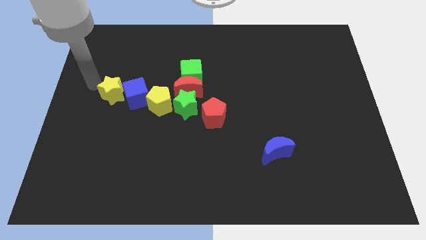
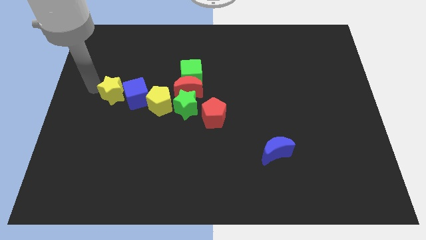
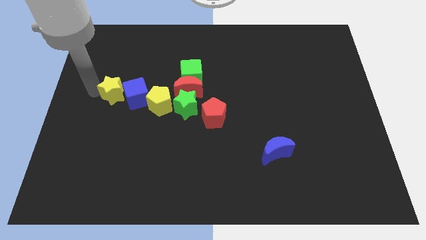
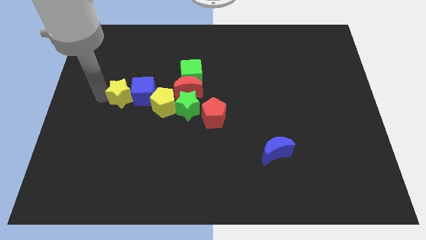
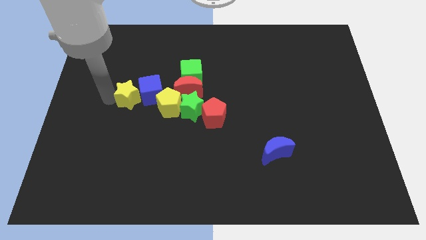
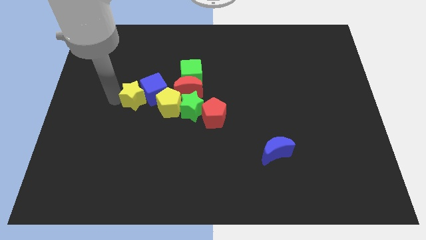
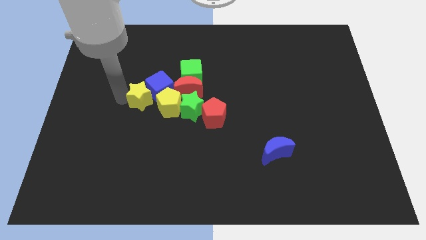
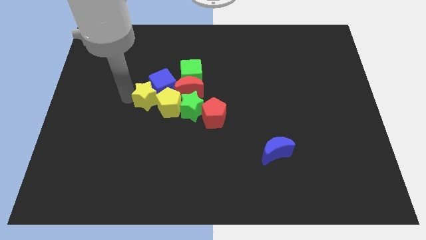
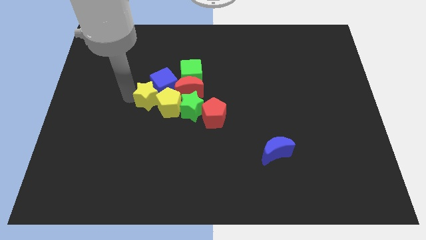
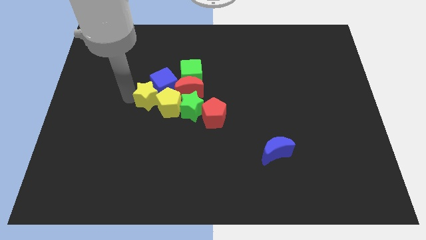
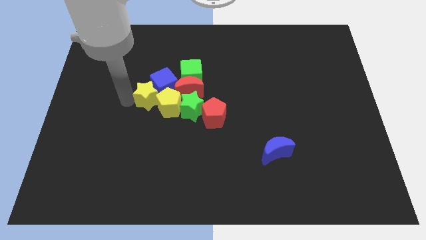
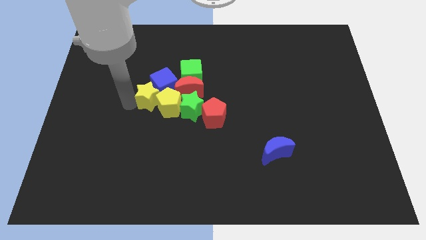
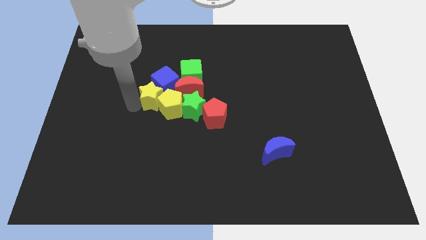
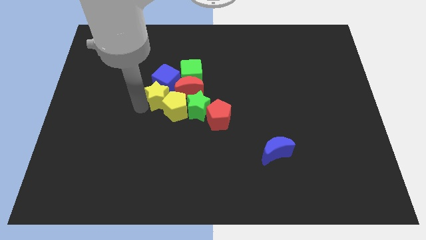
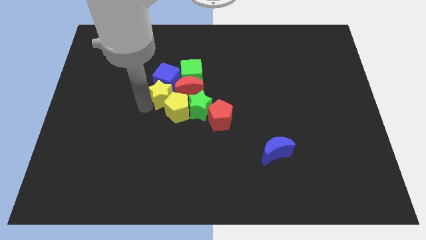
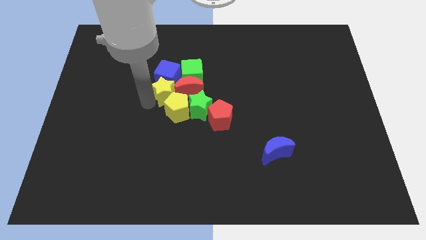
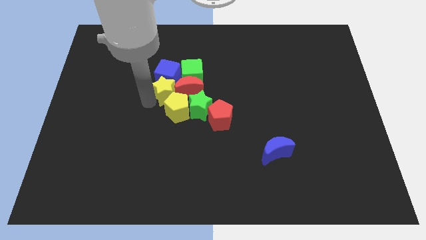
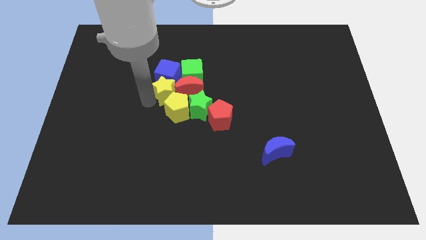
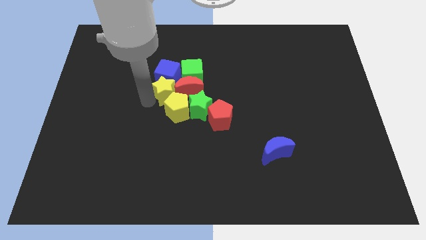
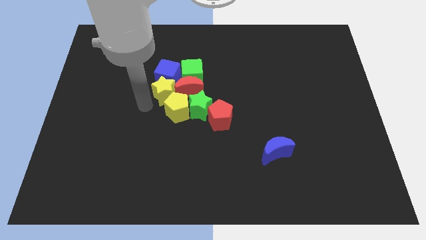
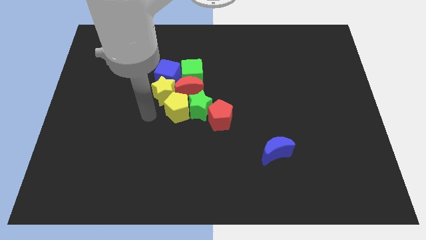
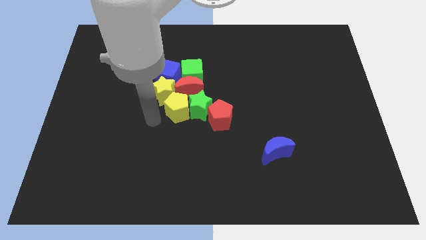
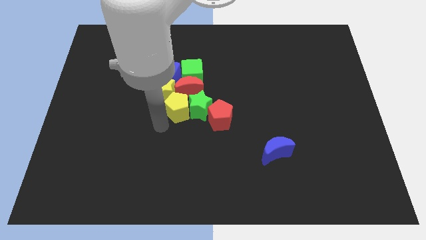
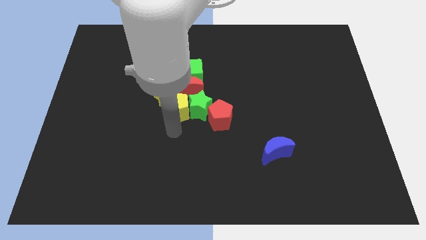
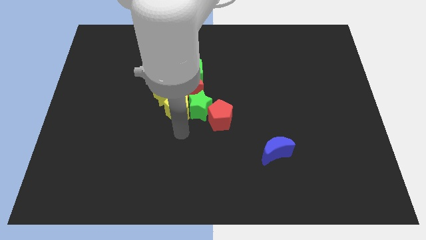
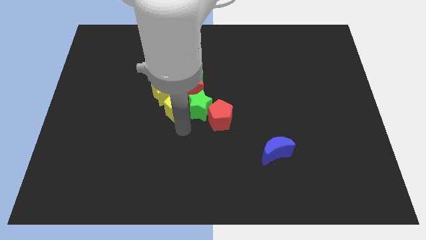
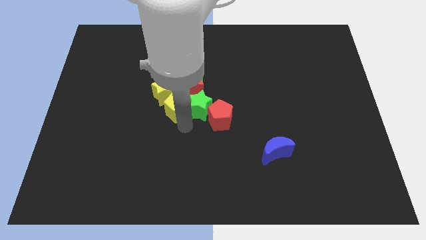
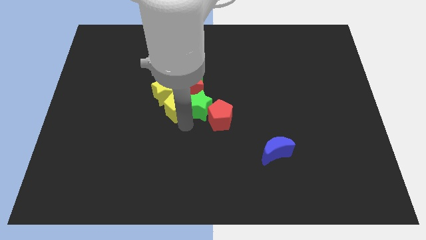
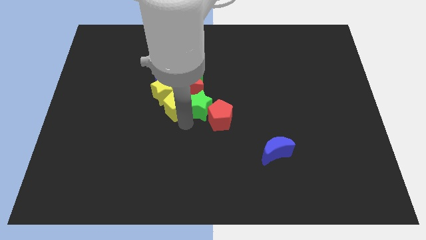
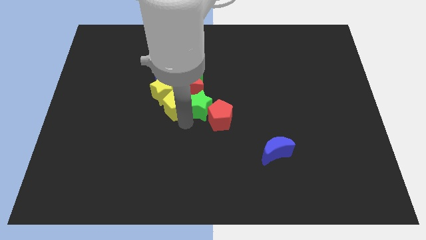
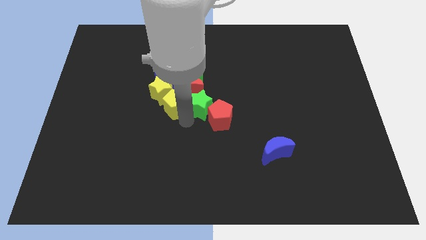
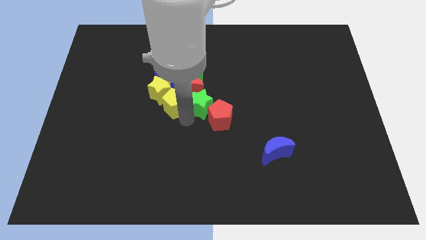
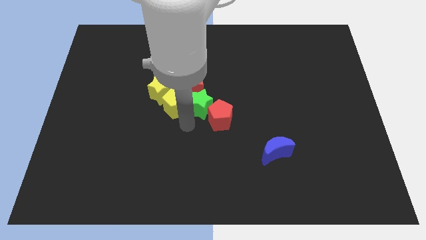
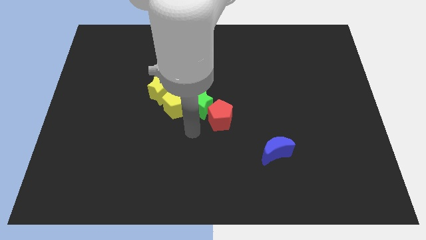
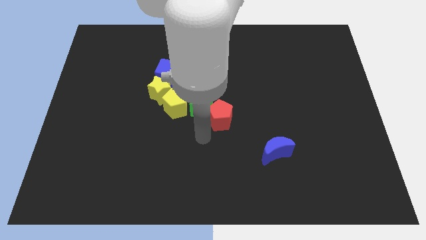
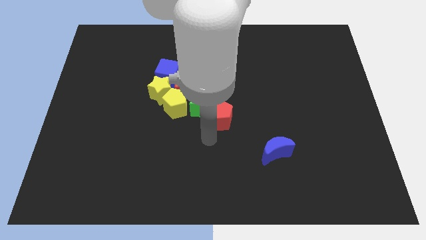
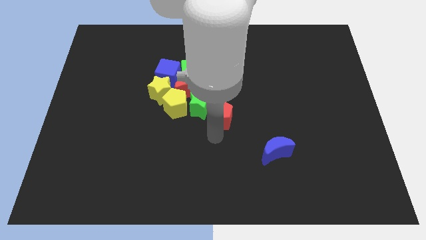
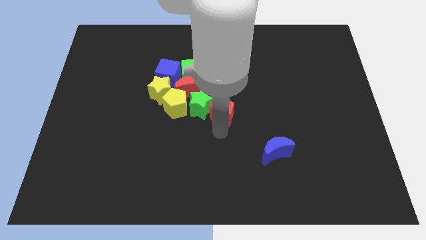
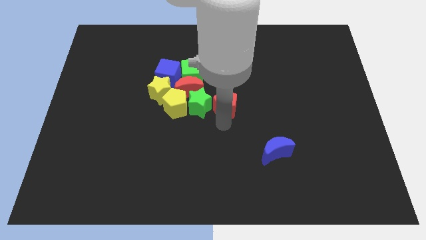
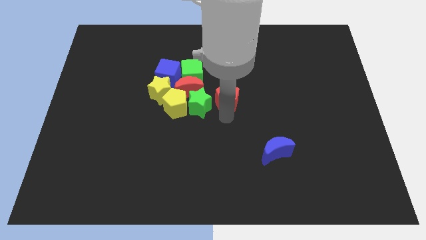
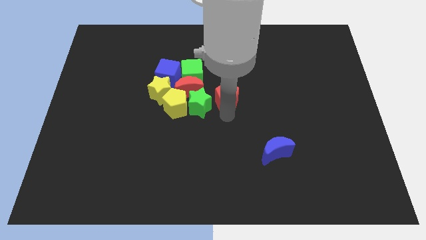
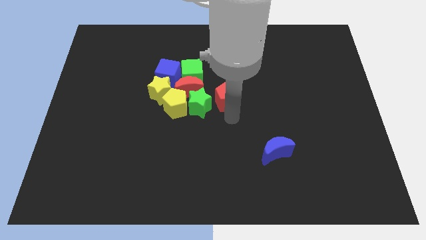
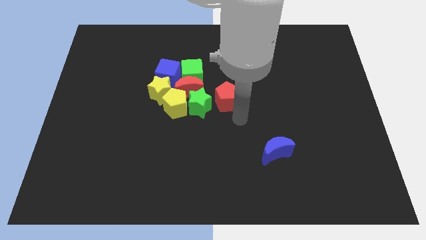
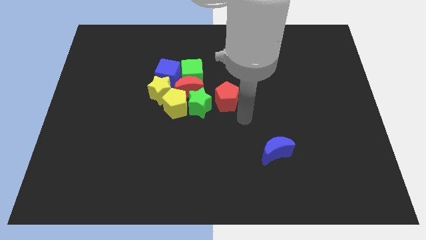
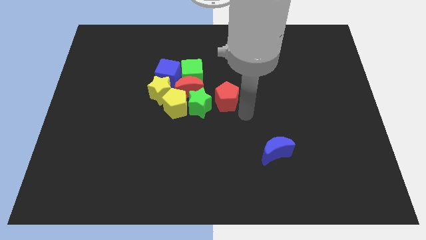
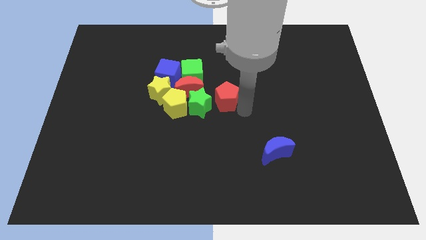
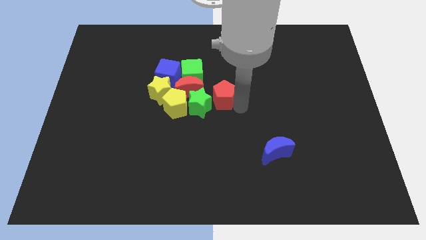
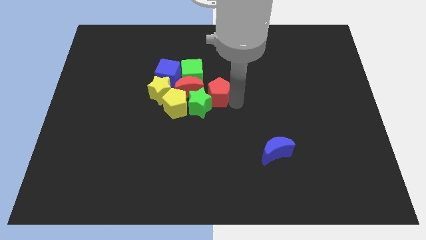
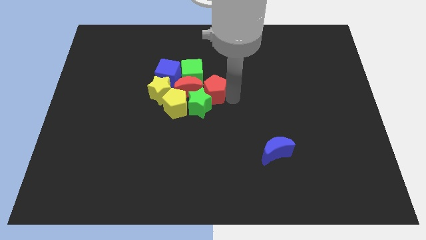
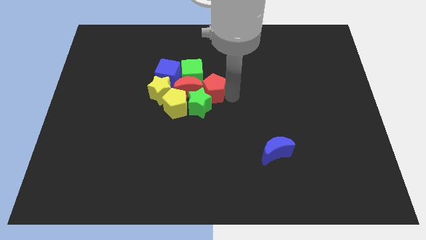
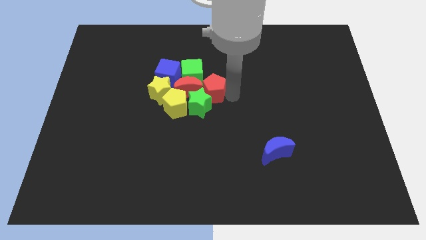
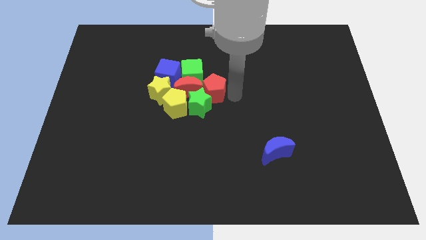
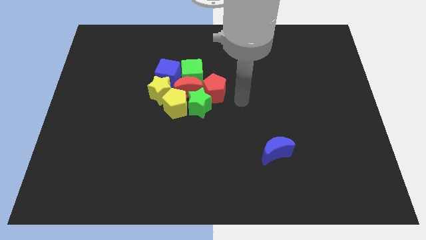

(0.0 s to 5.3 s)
push a group of blocks to the center

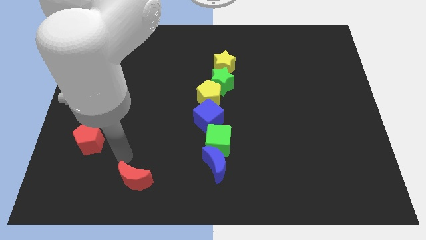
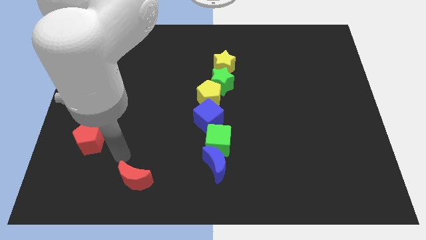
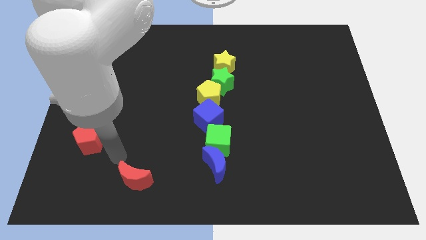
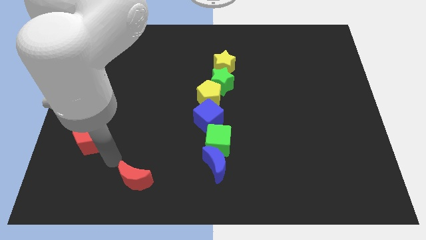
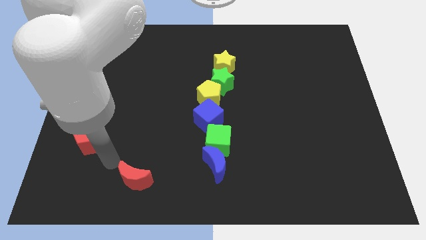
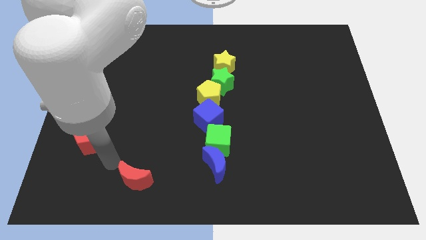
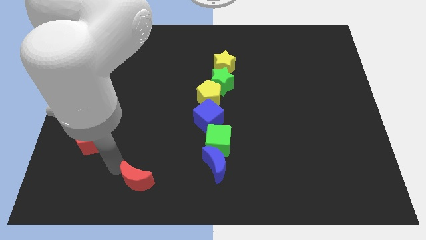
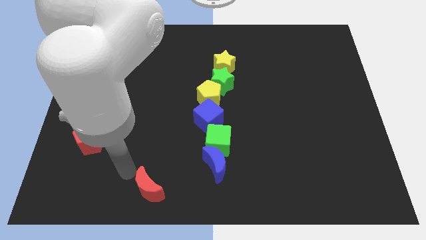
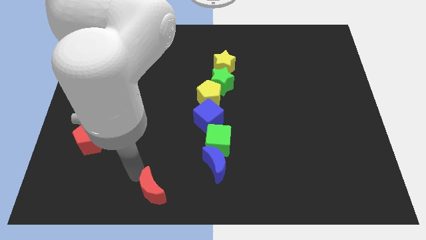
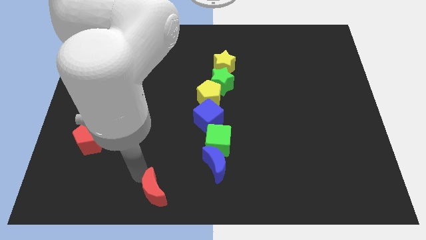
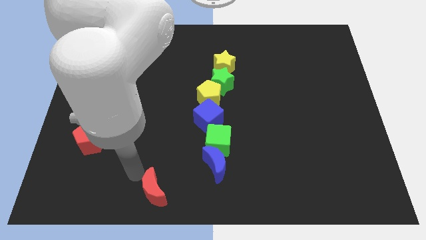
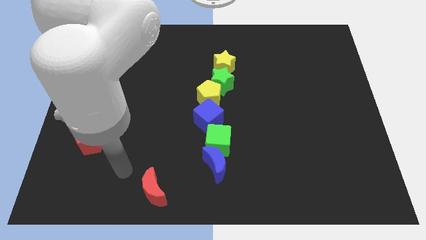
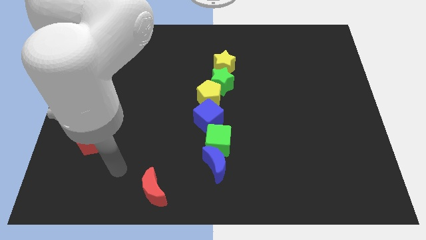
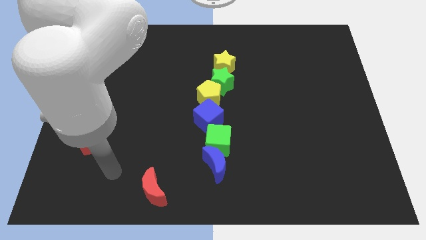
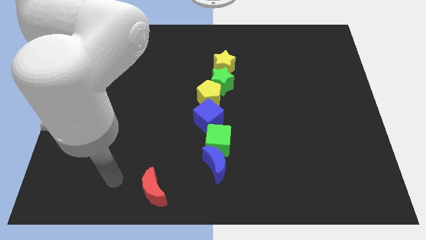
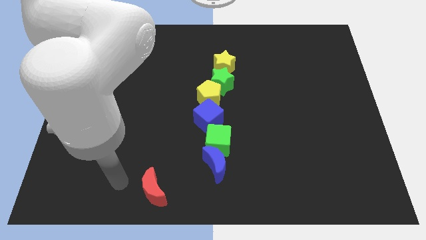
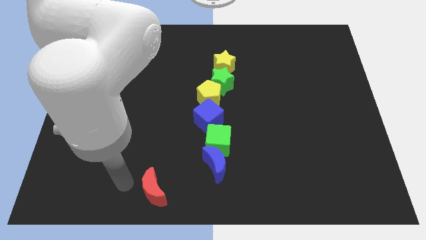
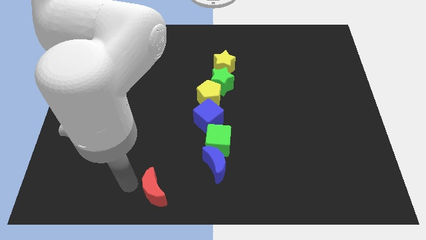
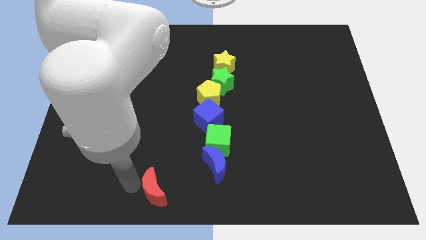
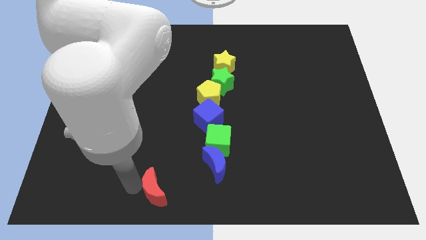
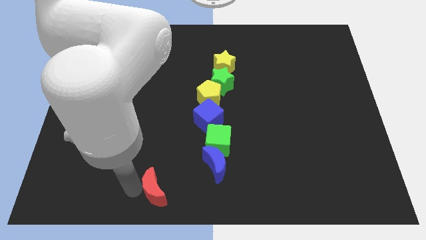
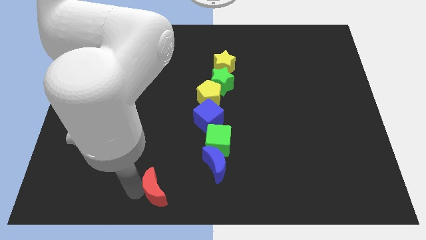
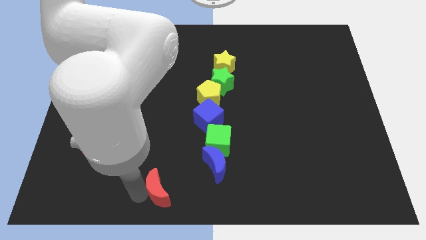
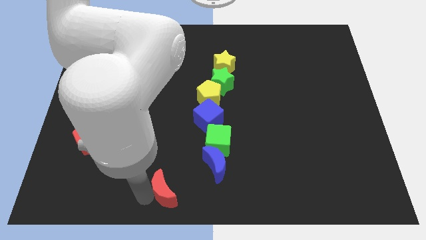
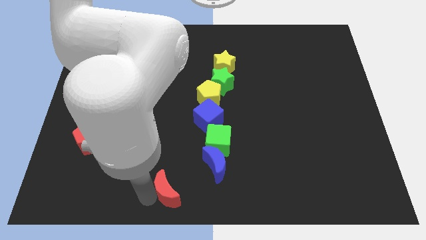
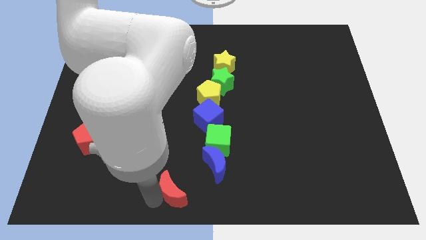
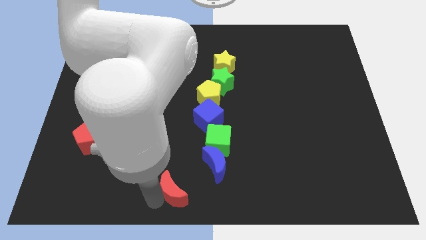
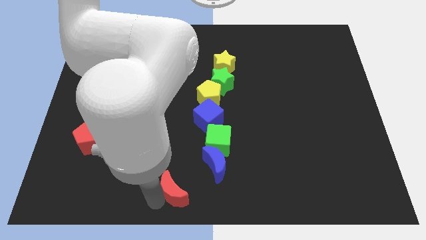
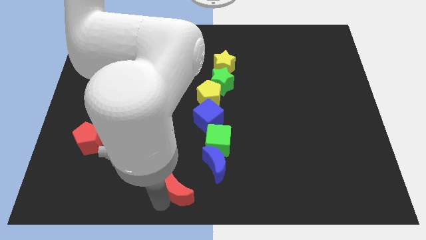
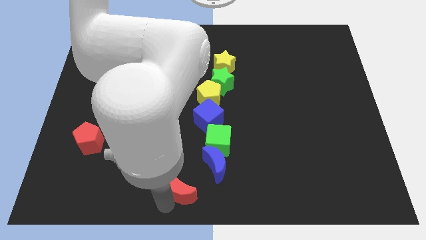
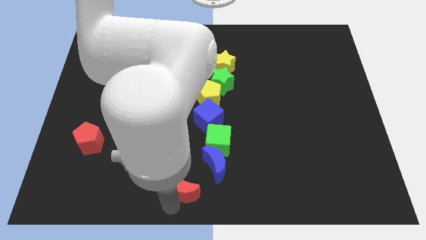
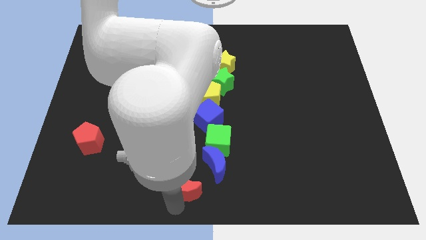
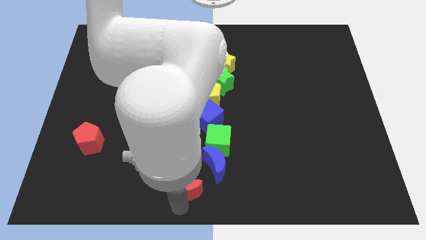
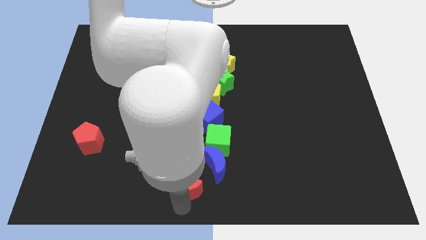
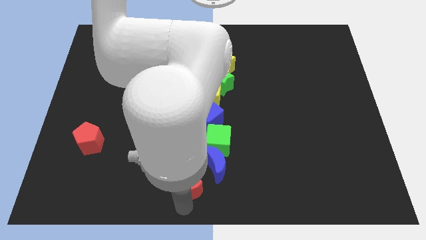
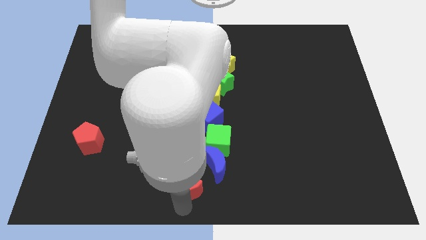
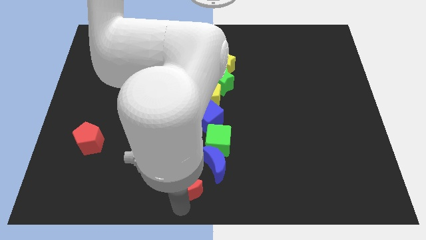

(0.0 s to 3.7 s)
push the red moon towards the blue moon
